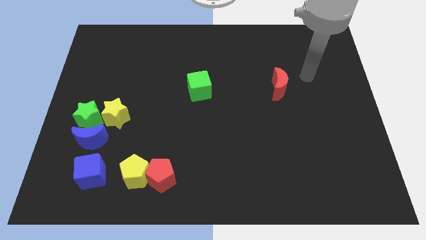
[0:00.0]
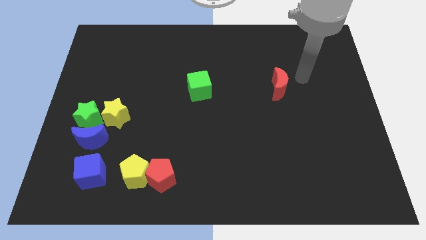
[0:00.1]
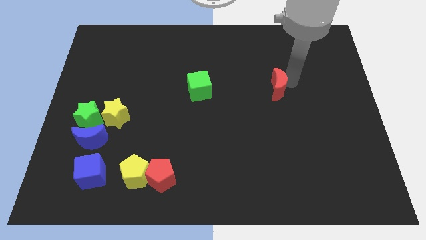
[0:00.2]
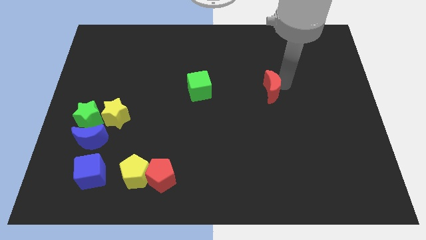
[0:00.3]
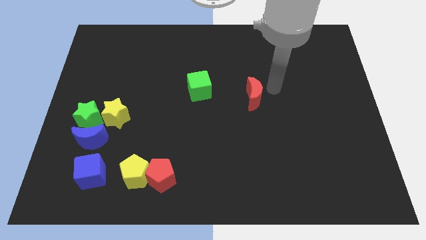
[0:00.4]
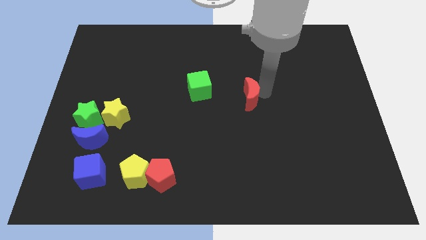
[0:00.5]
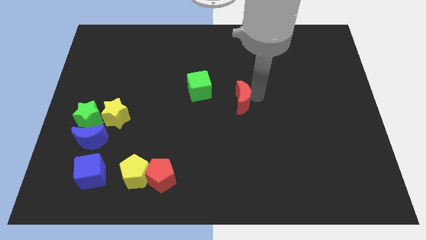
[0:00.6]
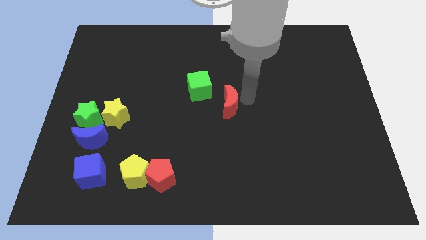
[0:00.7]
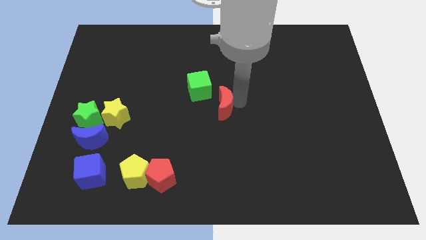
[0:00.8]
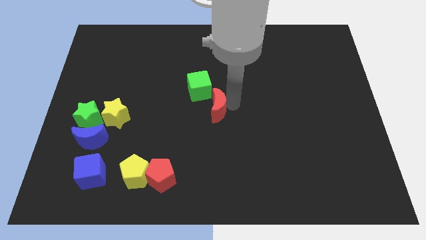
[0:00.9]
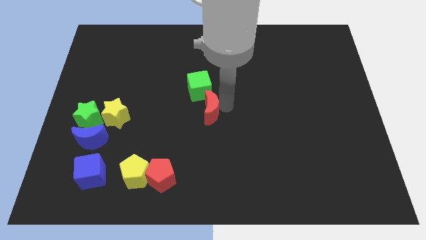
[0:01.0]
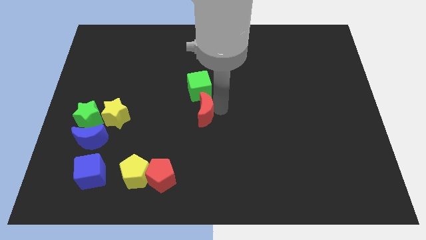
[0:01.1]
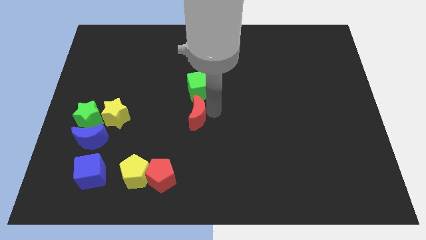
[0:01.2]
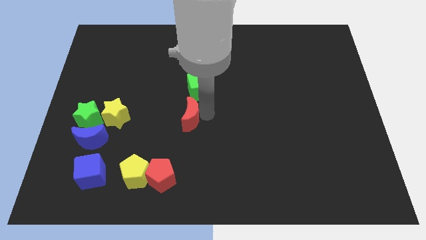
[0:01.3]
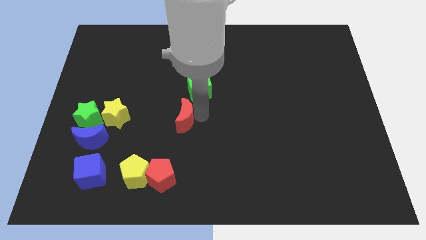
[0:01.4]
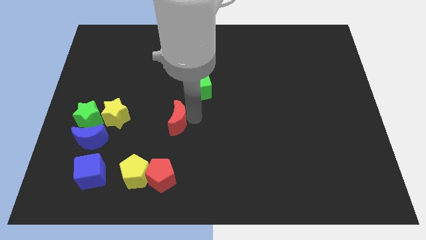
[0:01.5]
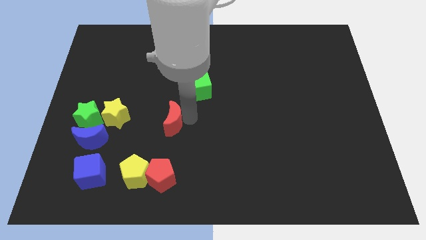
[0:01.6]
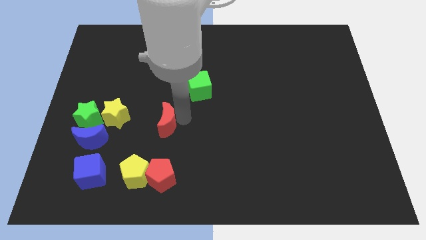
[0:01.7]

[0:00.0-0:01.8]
place the red crescent to the right of the yellow star

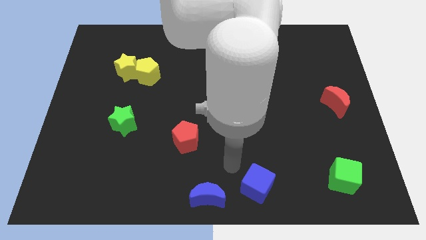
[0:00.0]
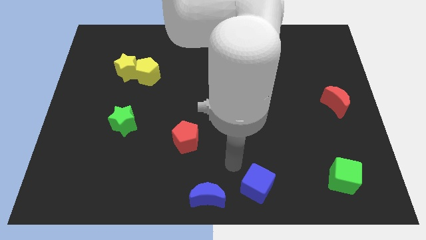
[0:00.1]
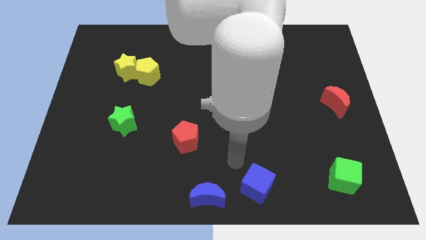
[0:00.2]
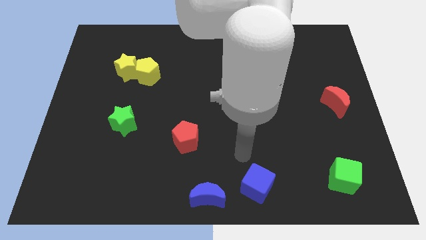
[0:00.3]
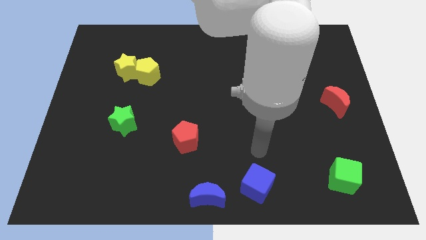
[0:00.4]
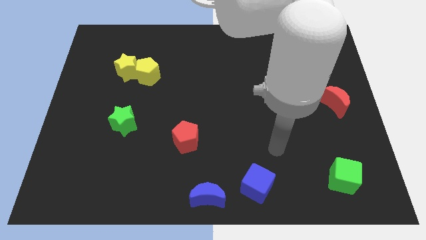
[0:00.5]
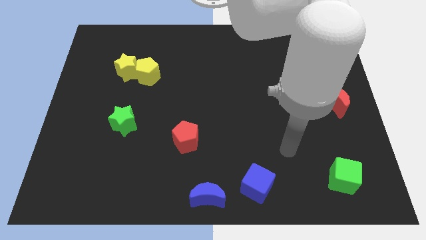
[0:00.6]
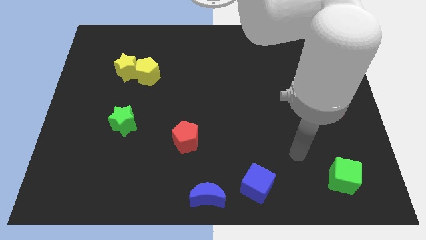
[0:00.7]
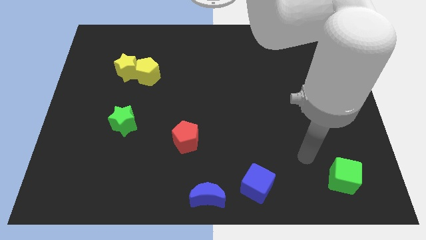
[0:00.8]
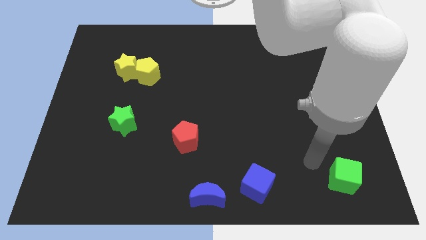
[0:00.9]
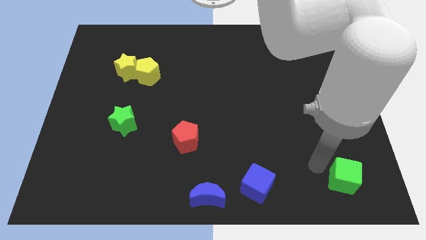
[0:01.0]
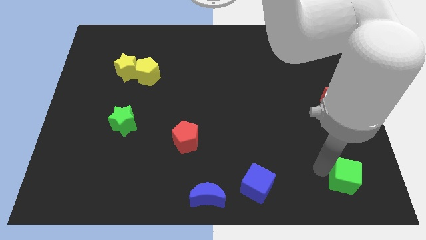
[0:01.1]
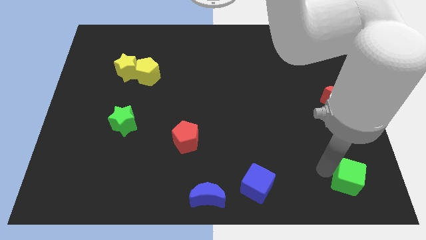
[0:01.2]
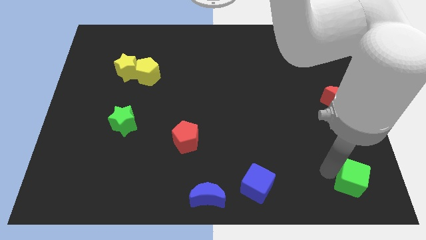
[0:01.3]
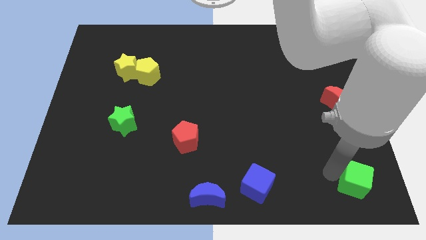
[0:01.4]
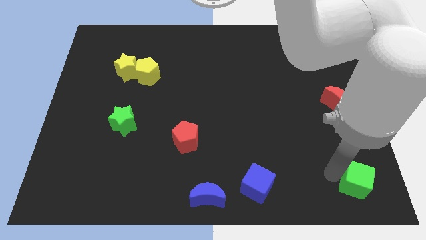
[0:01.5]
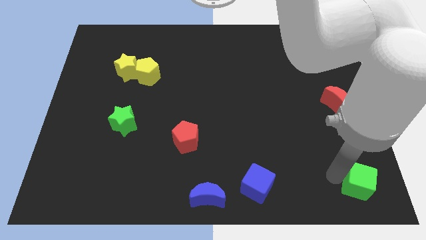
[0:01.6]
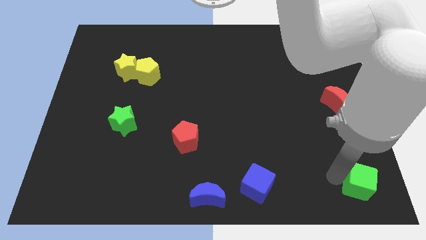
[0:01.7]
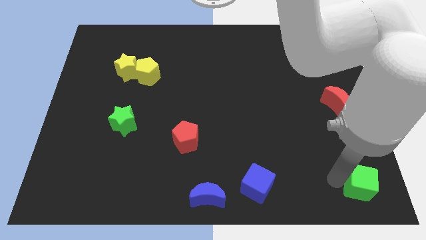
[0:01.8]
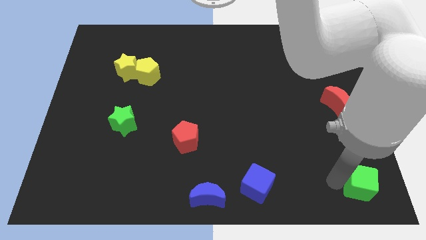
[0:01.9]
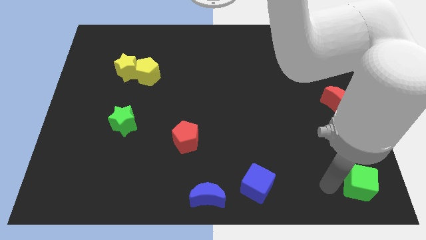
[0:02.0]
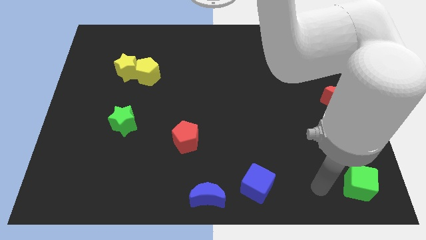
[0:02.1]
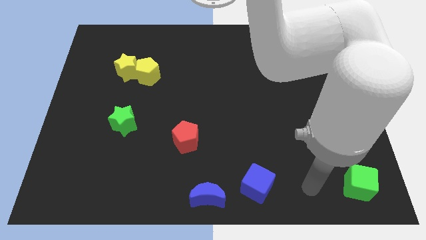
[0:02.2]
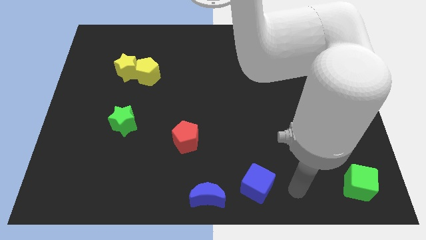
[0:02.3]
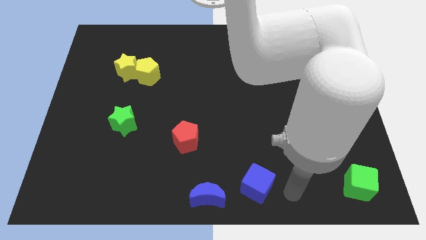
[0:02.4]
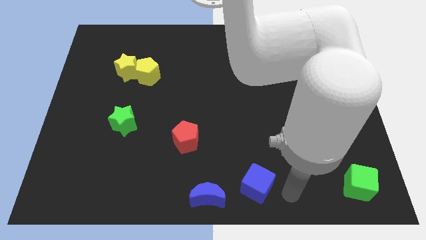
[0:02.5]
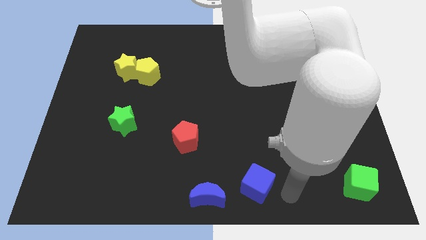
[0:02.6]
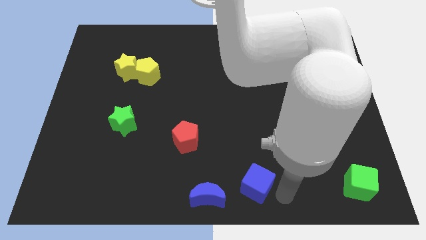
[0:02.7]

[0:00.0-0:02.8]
move the green cube slightly to the right

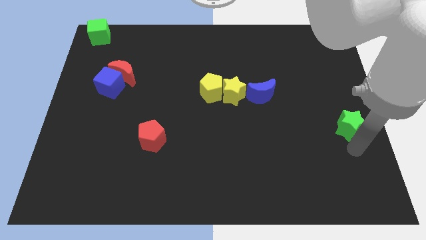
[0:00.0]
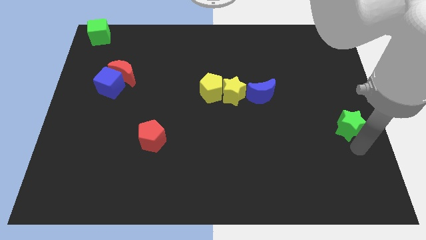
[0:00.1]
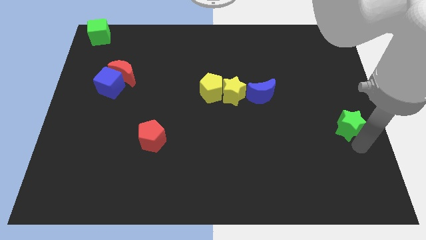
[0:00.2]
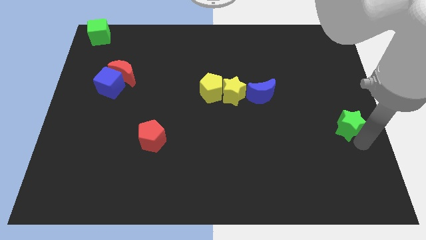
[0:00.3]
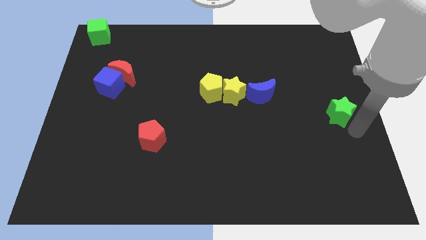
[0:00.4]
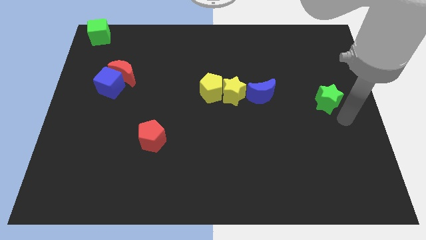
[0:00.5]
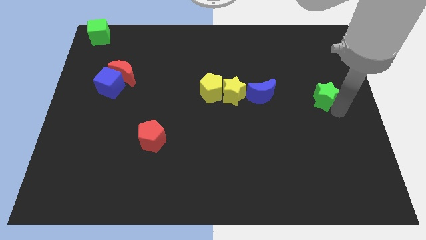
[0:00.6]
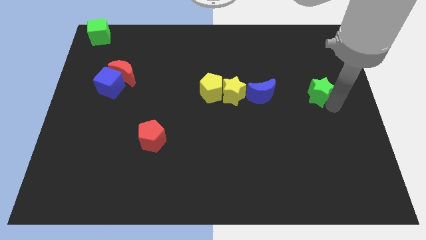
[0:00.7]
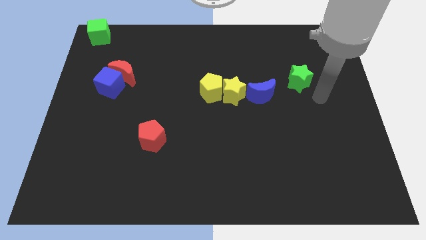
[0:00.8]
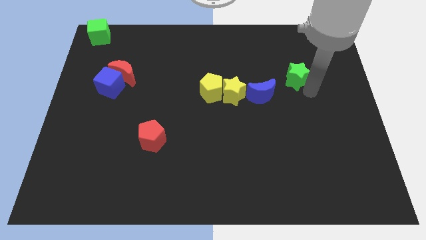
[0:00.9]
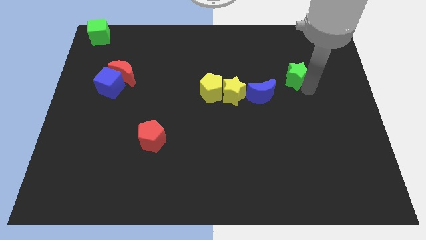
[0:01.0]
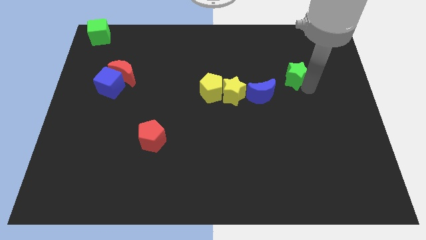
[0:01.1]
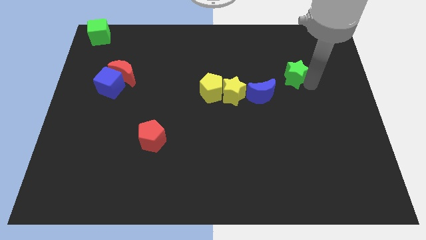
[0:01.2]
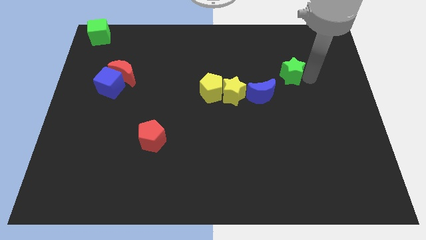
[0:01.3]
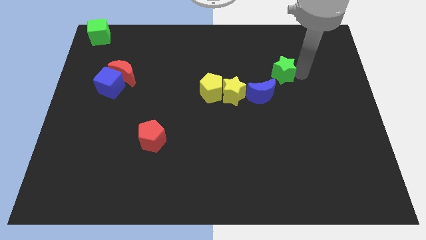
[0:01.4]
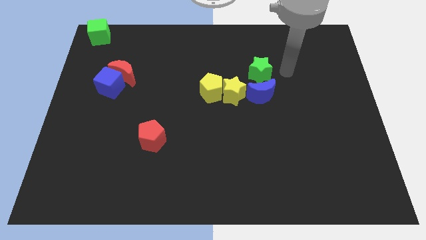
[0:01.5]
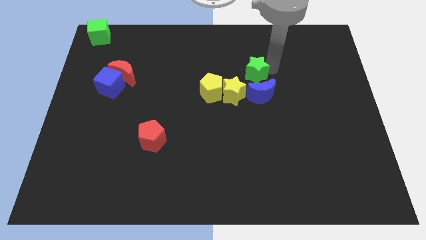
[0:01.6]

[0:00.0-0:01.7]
place the green star above the blue moon

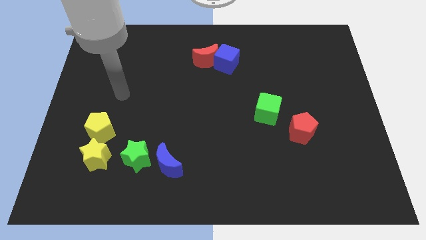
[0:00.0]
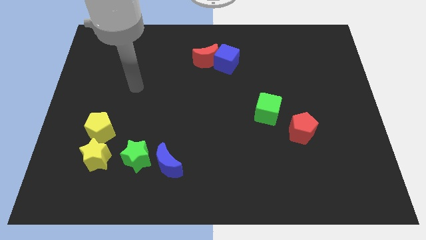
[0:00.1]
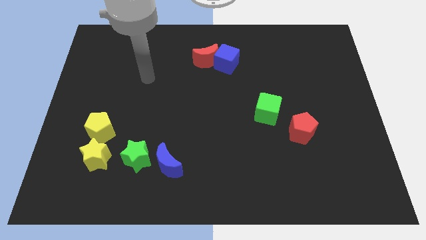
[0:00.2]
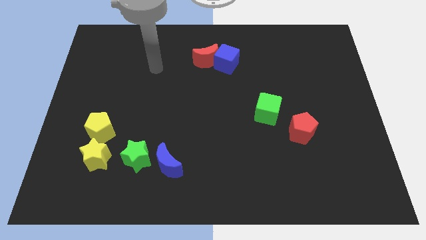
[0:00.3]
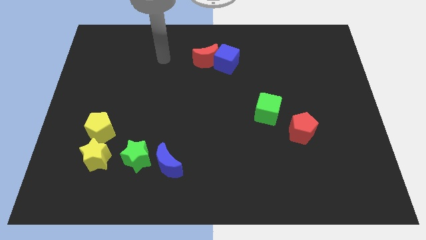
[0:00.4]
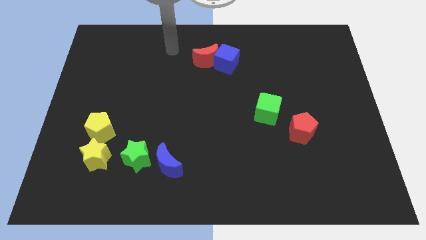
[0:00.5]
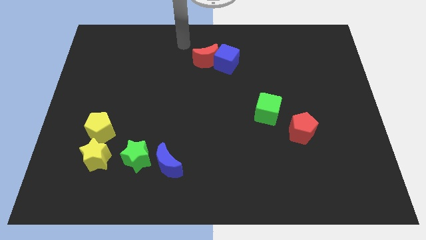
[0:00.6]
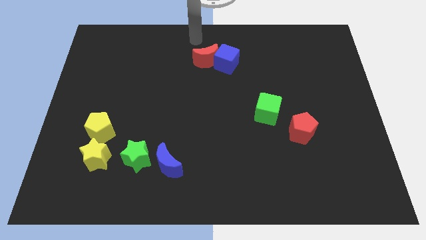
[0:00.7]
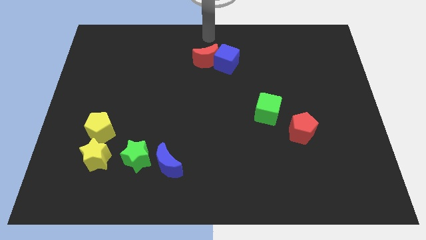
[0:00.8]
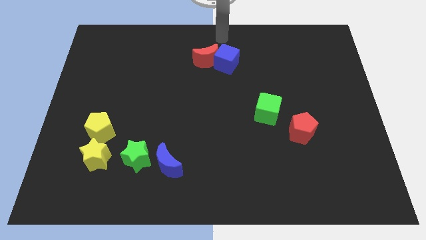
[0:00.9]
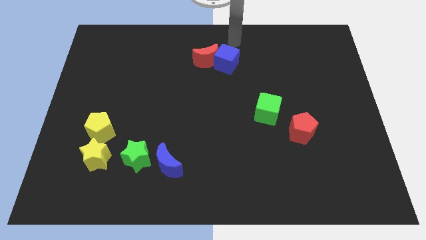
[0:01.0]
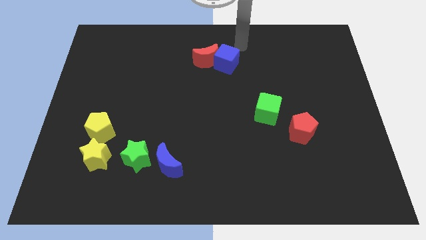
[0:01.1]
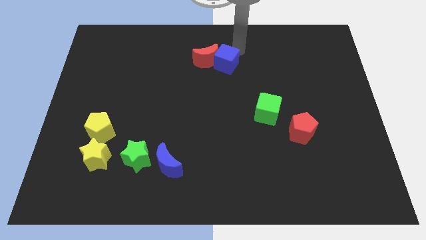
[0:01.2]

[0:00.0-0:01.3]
place arm on the top of blue cube

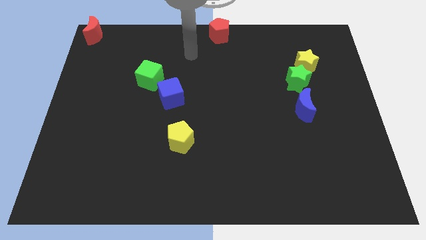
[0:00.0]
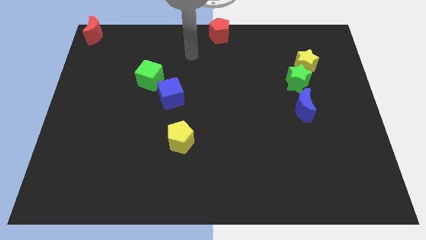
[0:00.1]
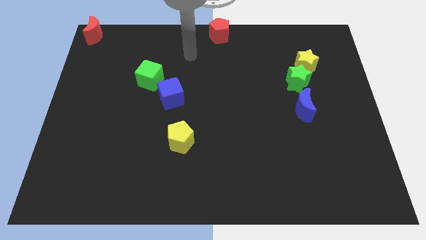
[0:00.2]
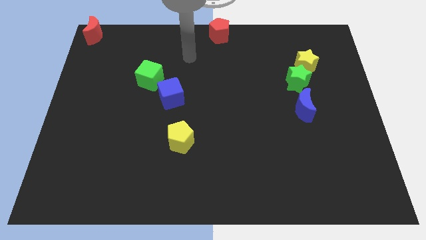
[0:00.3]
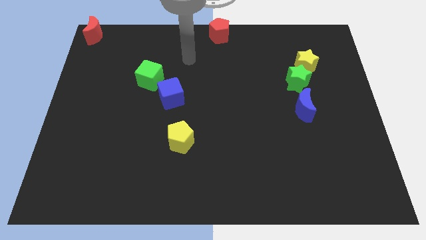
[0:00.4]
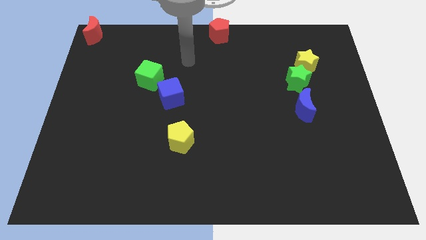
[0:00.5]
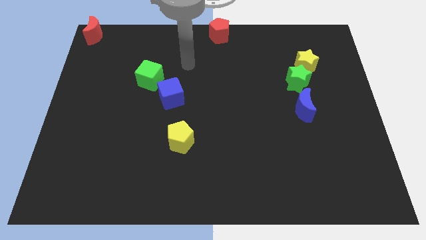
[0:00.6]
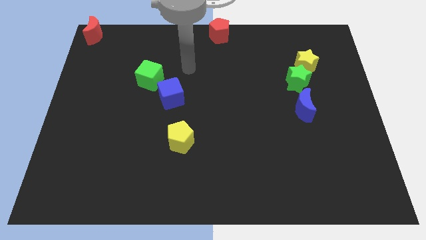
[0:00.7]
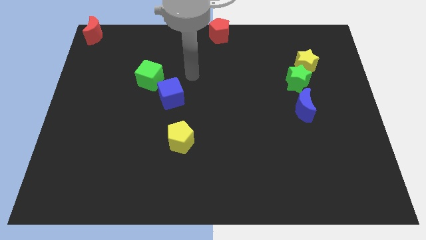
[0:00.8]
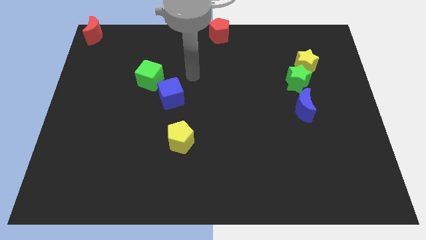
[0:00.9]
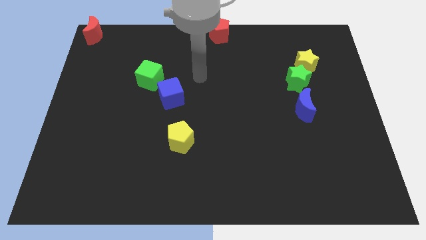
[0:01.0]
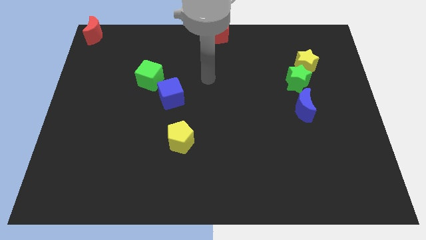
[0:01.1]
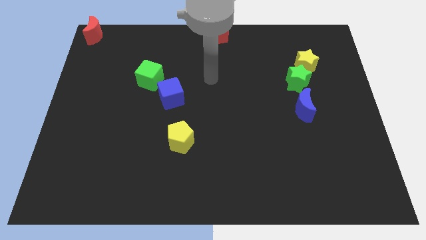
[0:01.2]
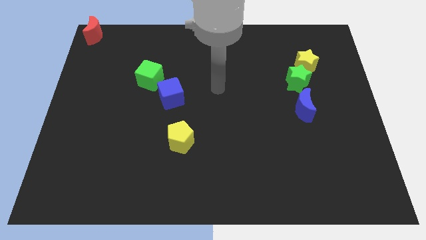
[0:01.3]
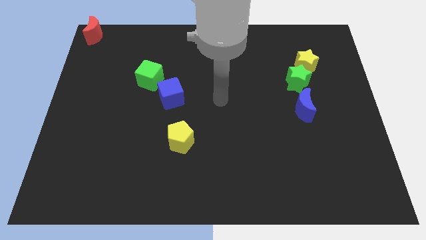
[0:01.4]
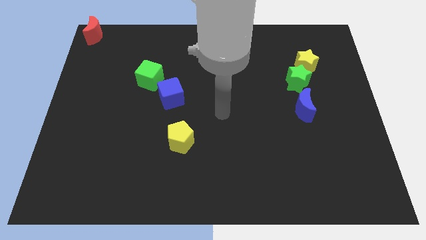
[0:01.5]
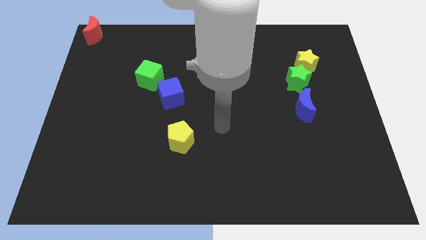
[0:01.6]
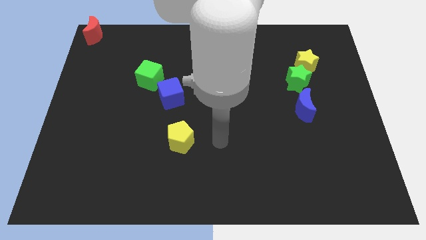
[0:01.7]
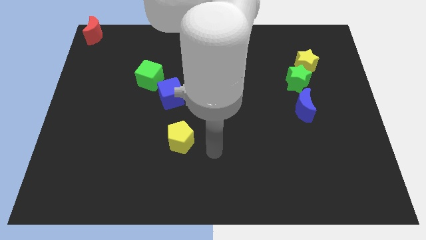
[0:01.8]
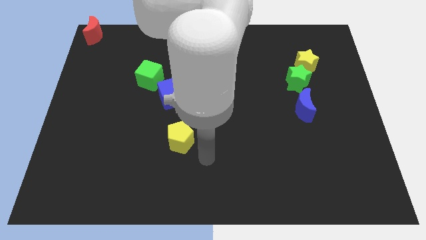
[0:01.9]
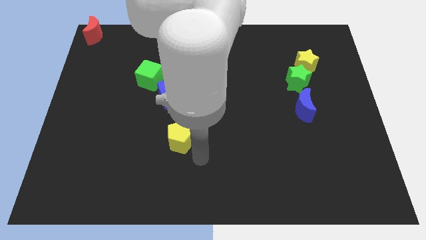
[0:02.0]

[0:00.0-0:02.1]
move your arm towards the bottom of the yellow pentagon
